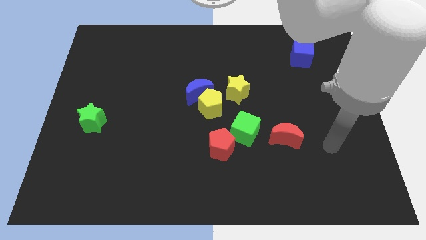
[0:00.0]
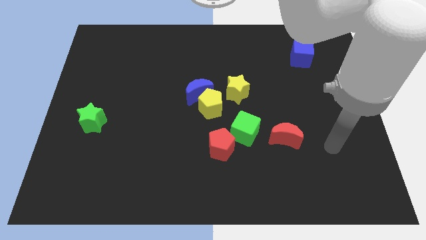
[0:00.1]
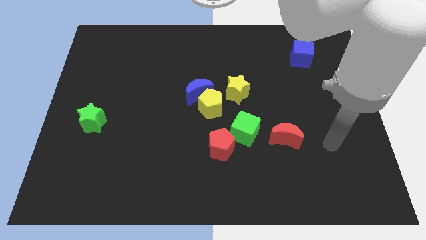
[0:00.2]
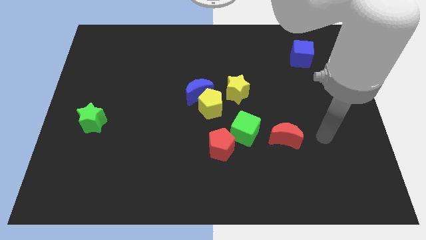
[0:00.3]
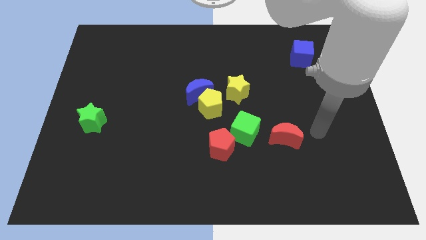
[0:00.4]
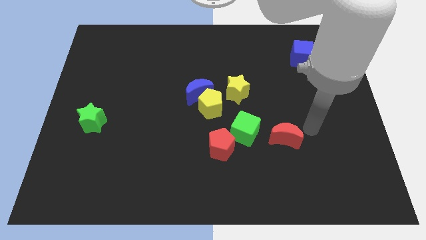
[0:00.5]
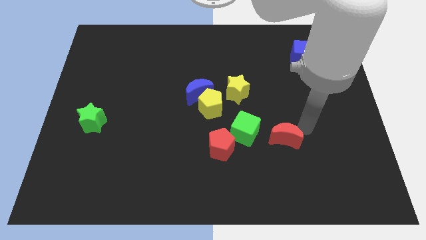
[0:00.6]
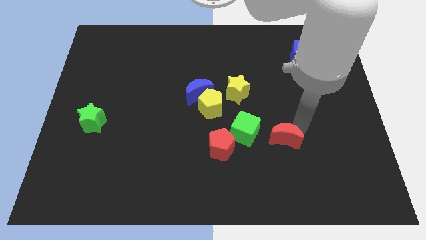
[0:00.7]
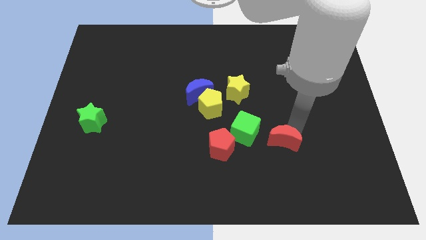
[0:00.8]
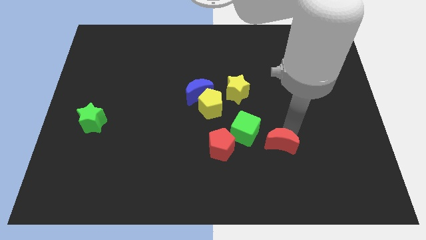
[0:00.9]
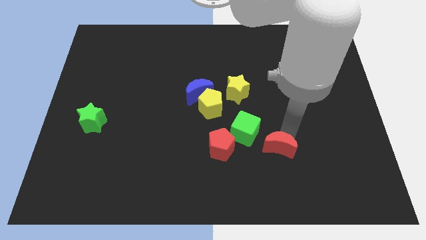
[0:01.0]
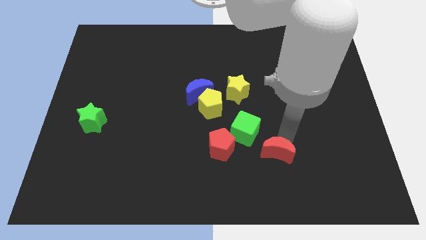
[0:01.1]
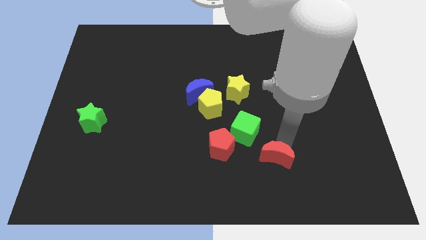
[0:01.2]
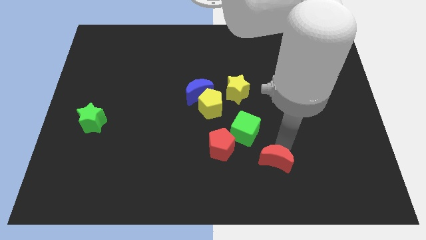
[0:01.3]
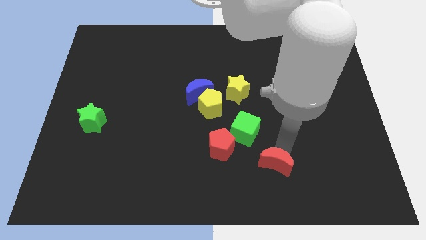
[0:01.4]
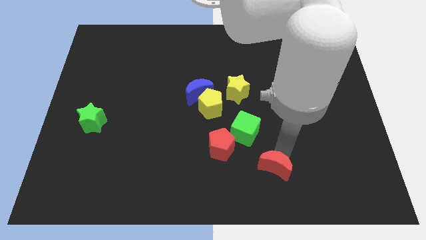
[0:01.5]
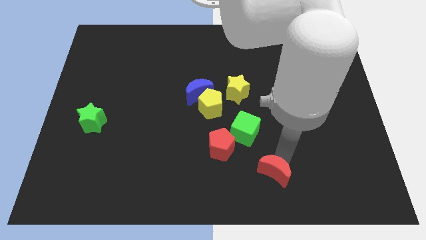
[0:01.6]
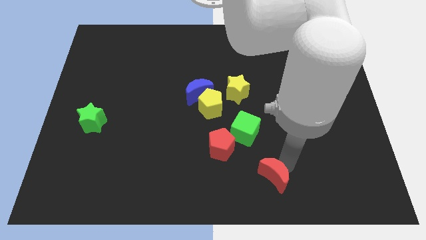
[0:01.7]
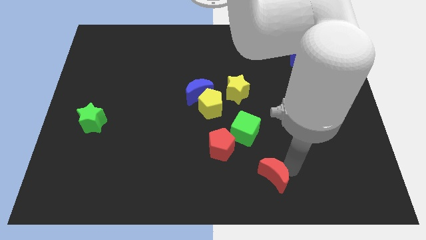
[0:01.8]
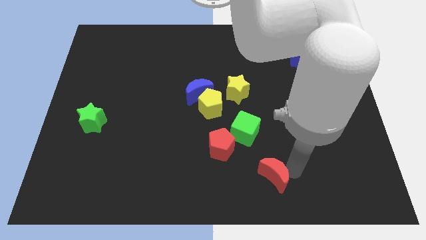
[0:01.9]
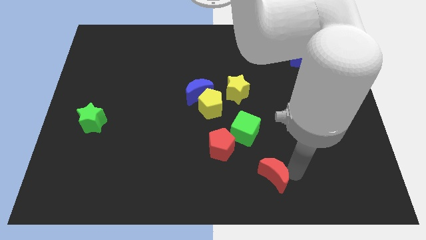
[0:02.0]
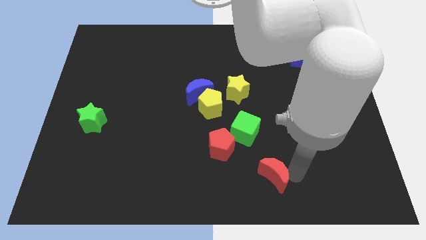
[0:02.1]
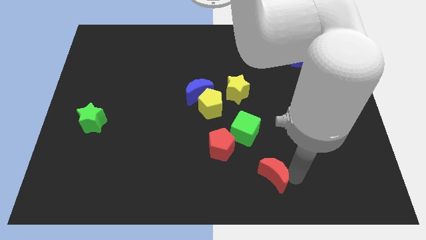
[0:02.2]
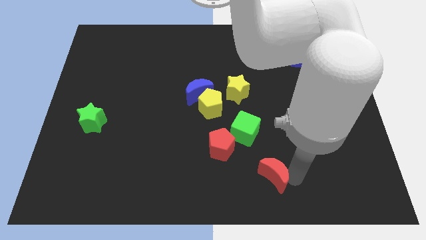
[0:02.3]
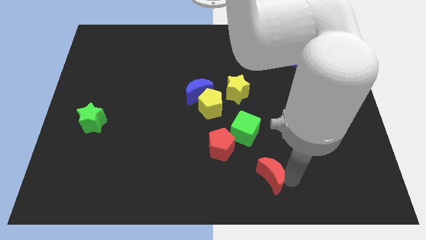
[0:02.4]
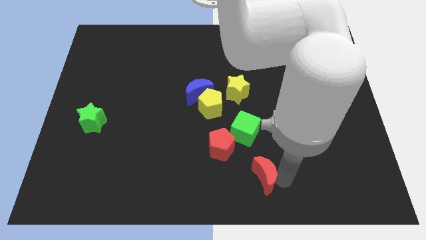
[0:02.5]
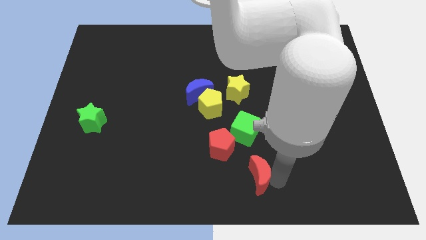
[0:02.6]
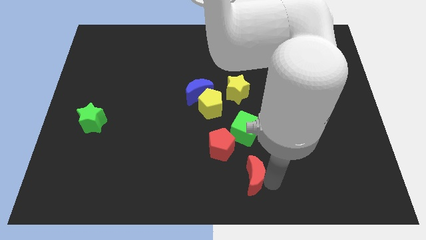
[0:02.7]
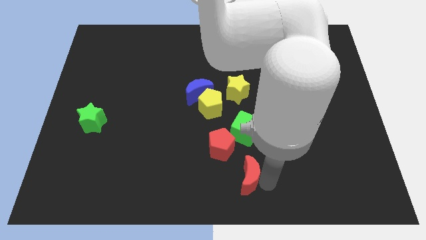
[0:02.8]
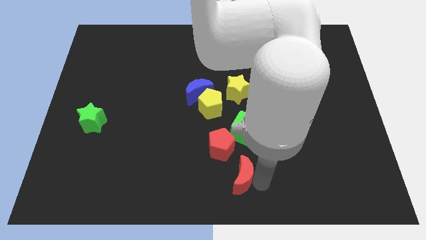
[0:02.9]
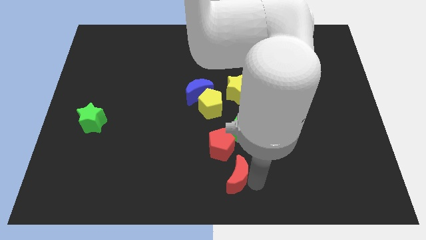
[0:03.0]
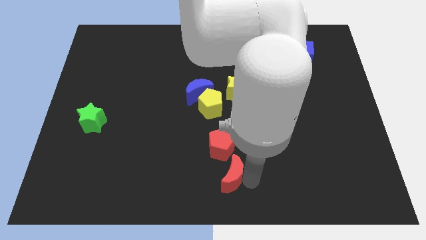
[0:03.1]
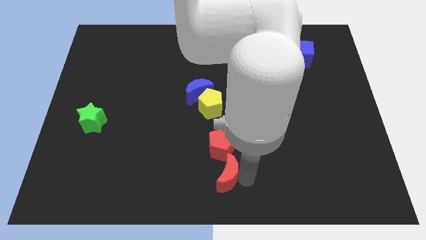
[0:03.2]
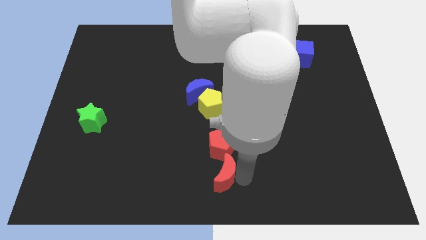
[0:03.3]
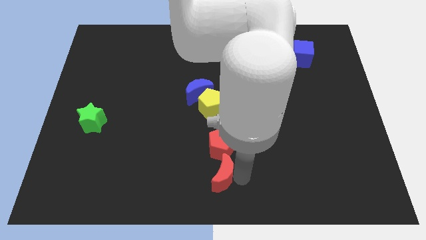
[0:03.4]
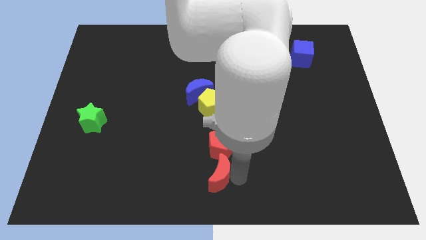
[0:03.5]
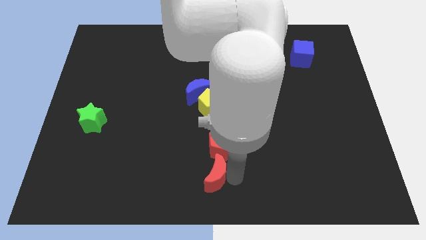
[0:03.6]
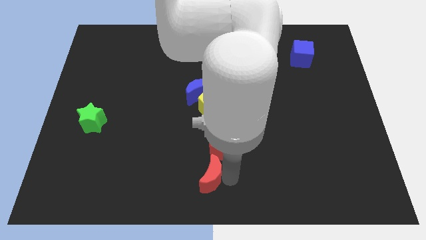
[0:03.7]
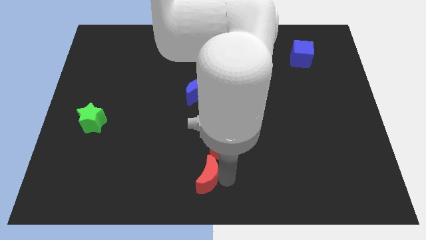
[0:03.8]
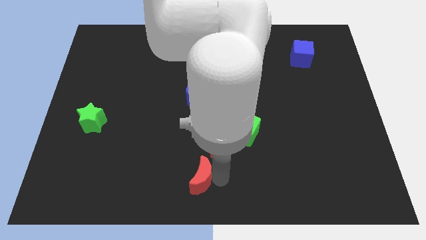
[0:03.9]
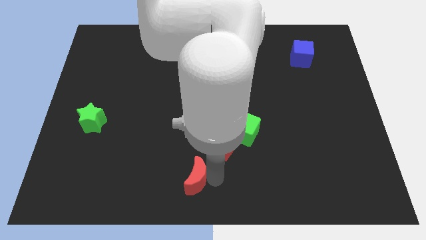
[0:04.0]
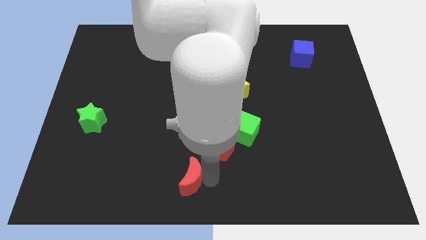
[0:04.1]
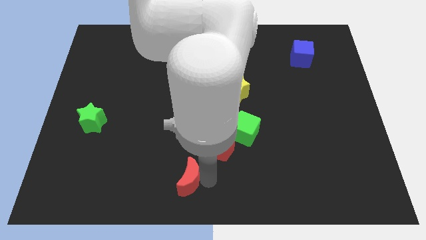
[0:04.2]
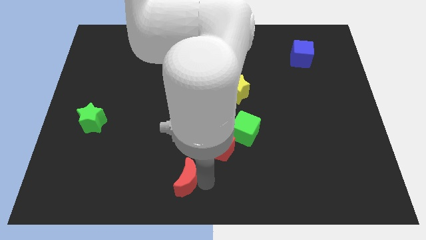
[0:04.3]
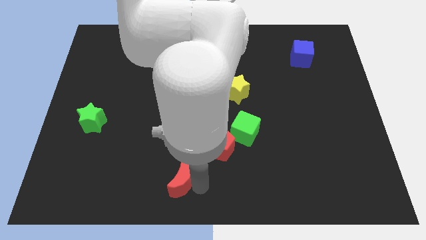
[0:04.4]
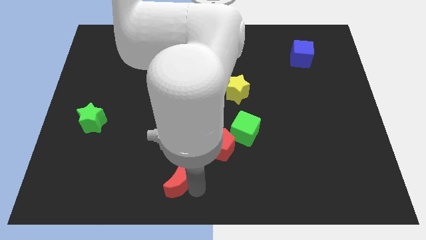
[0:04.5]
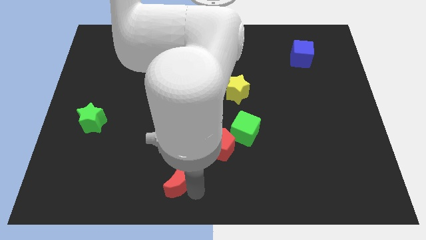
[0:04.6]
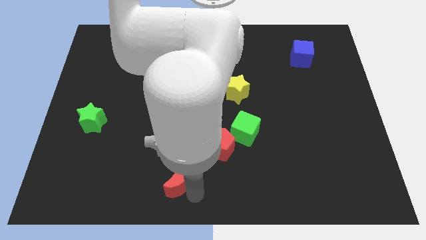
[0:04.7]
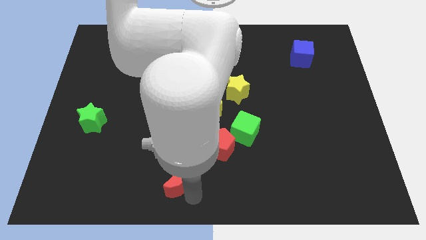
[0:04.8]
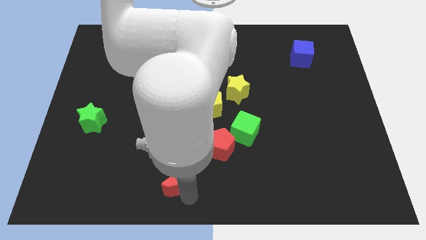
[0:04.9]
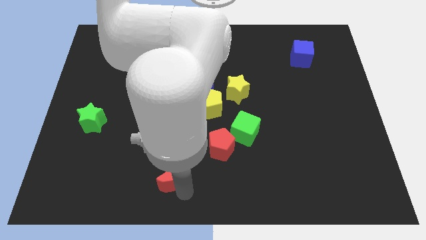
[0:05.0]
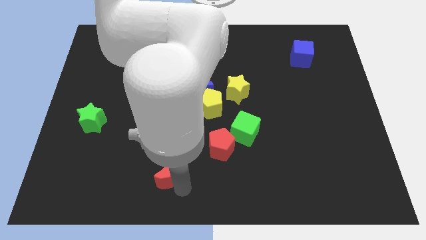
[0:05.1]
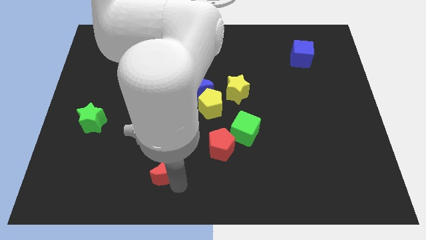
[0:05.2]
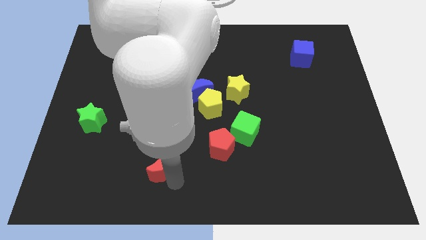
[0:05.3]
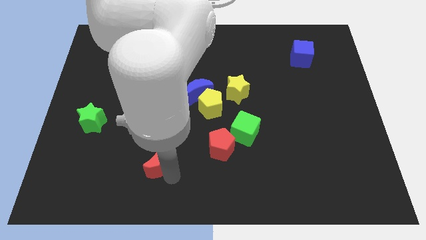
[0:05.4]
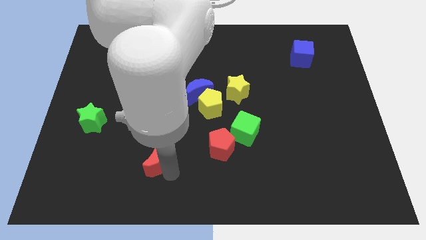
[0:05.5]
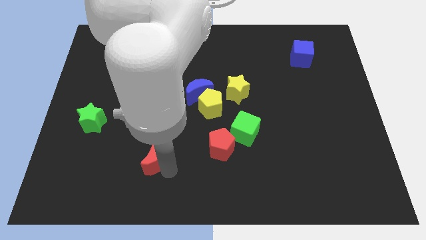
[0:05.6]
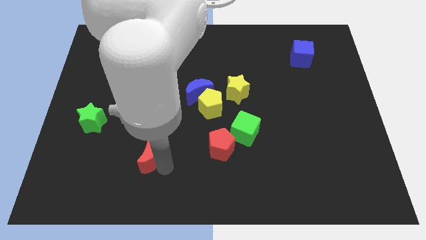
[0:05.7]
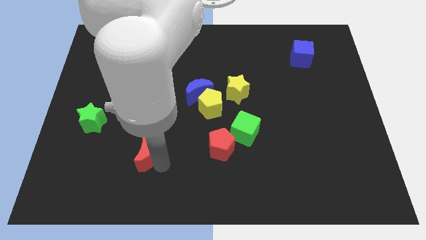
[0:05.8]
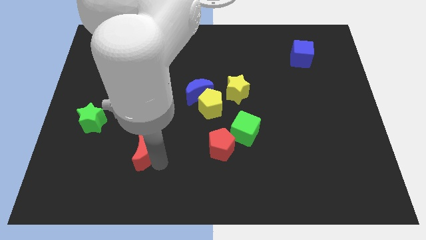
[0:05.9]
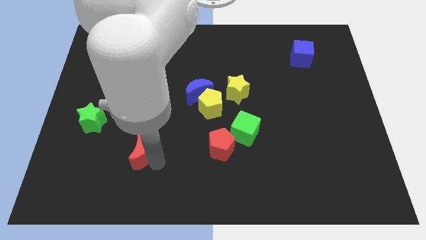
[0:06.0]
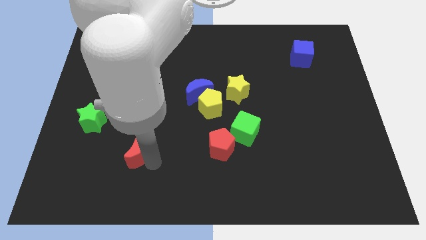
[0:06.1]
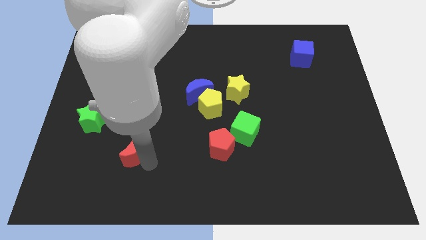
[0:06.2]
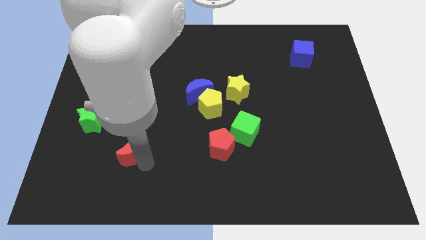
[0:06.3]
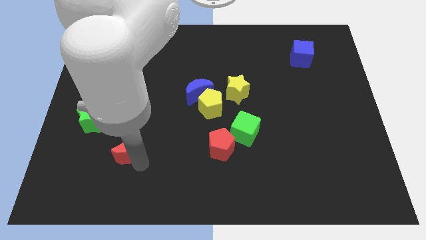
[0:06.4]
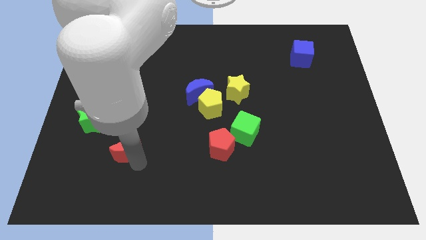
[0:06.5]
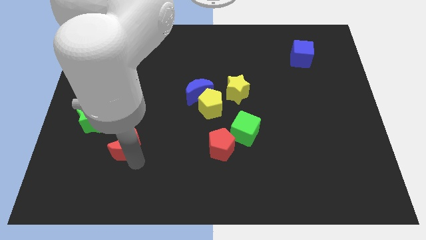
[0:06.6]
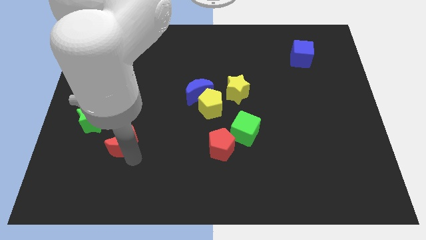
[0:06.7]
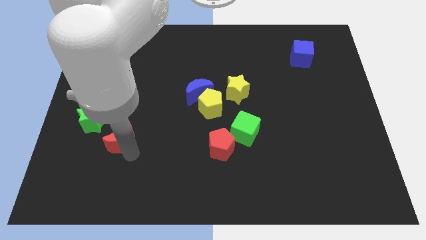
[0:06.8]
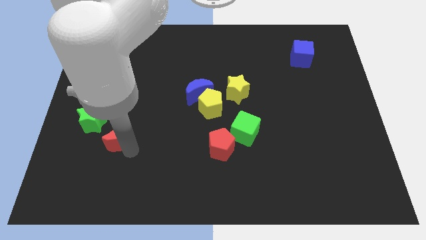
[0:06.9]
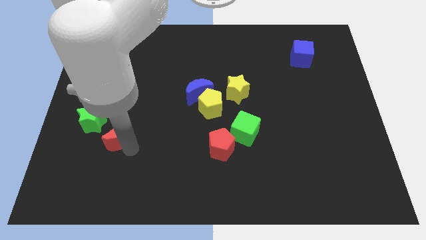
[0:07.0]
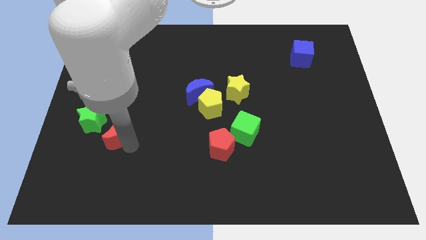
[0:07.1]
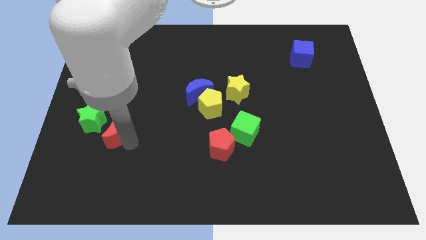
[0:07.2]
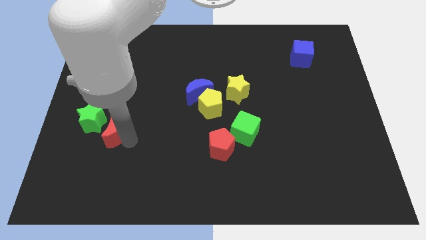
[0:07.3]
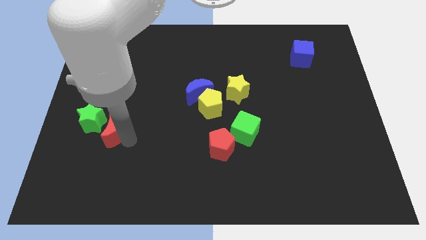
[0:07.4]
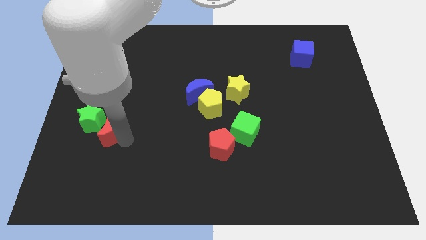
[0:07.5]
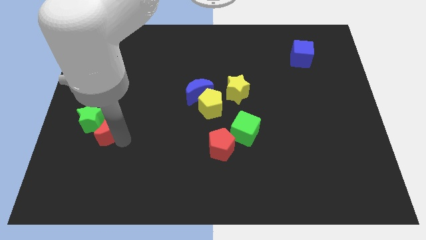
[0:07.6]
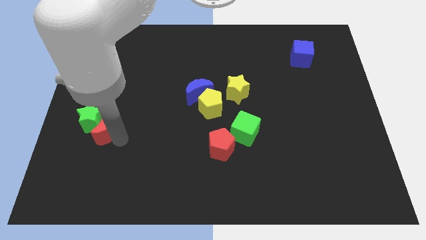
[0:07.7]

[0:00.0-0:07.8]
push the red moon next to the green star

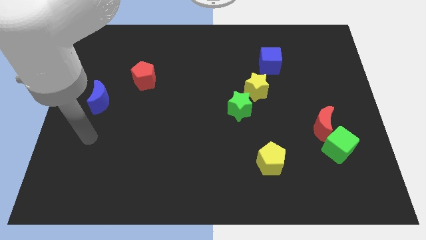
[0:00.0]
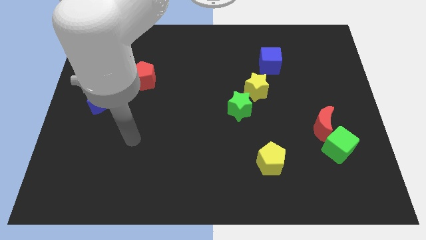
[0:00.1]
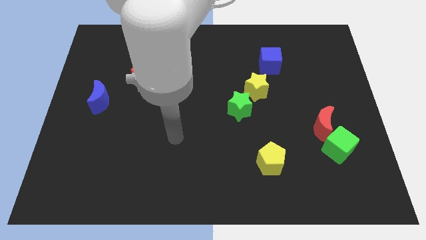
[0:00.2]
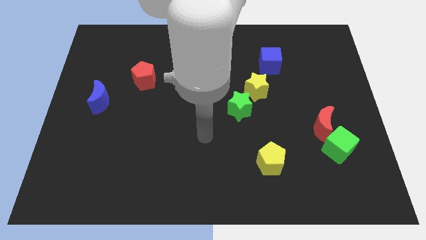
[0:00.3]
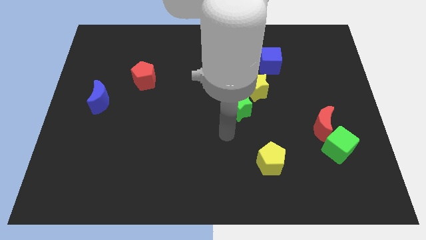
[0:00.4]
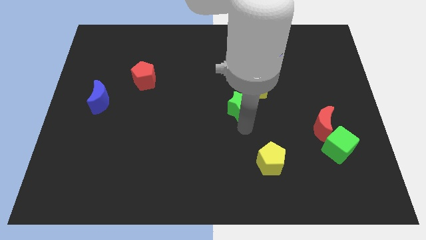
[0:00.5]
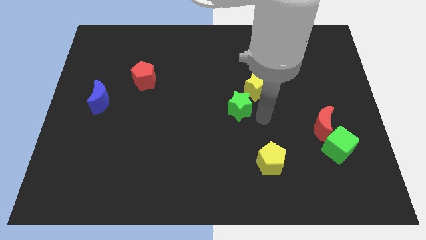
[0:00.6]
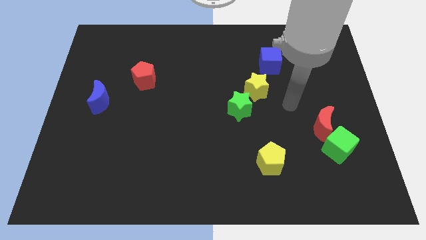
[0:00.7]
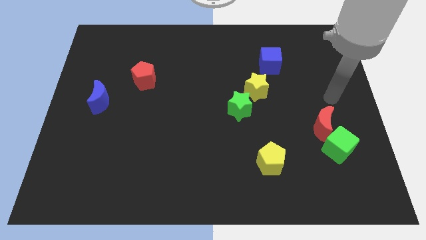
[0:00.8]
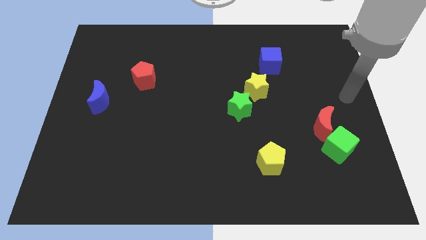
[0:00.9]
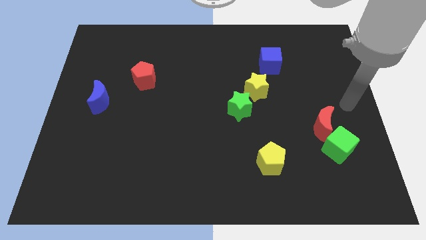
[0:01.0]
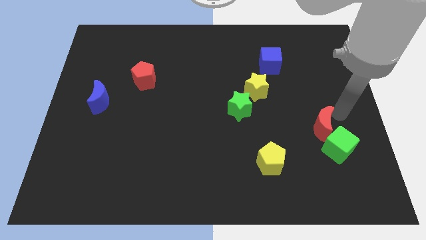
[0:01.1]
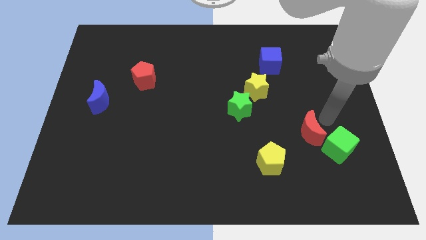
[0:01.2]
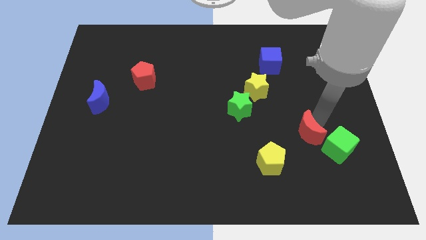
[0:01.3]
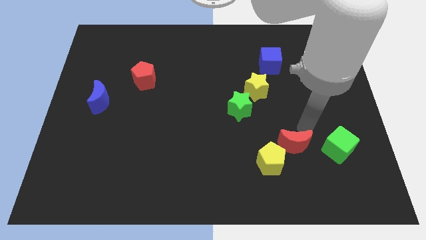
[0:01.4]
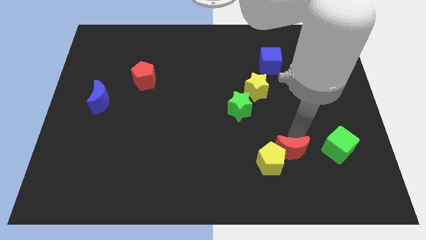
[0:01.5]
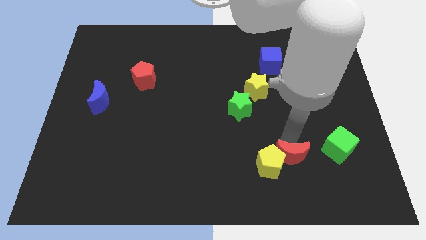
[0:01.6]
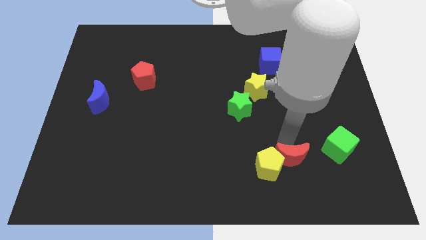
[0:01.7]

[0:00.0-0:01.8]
slide the red moon towards the yellow pentagon
